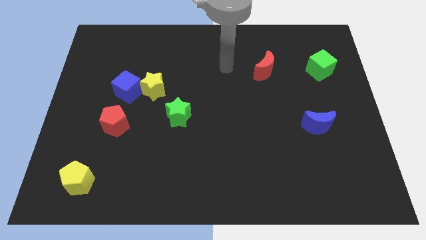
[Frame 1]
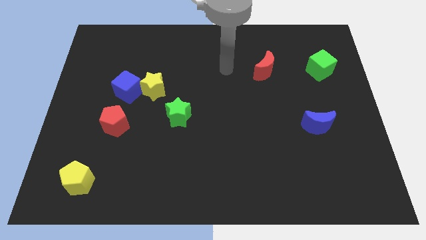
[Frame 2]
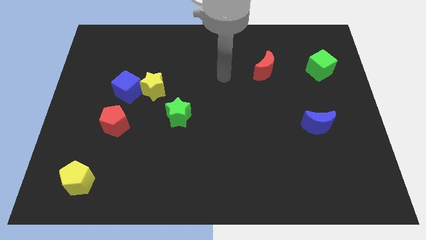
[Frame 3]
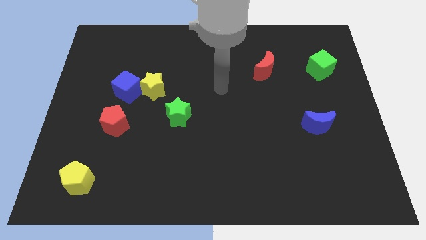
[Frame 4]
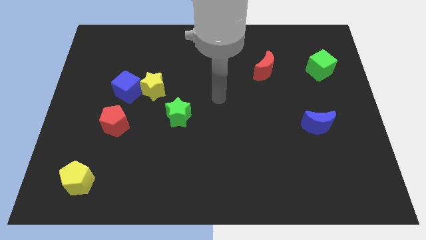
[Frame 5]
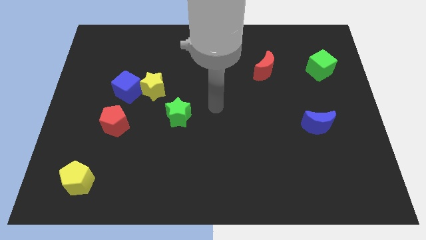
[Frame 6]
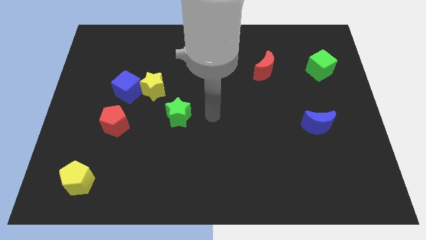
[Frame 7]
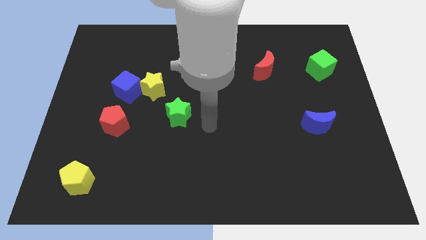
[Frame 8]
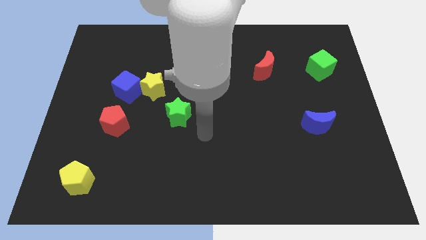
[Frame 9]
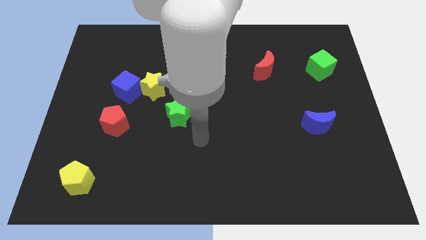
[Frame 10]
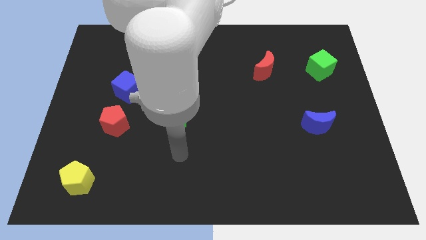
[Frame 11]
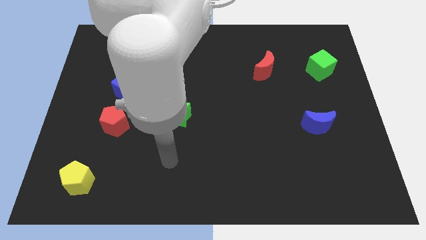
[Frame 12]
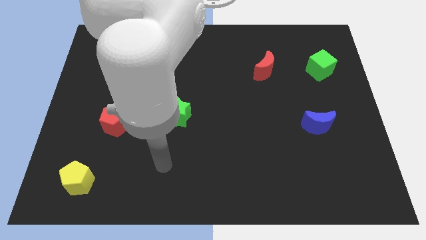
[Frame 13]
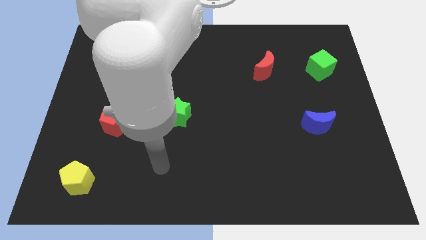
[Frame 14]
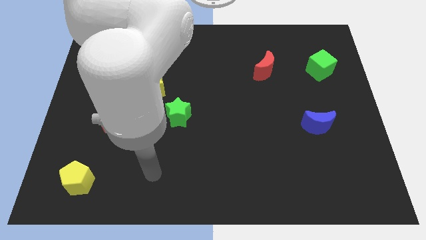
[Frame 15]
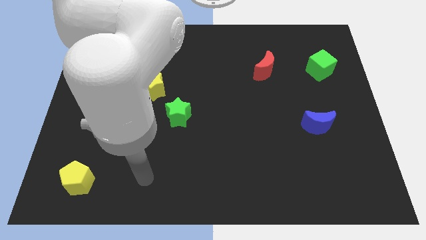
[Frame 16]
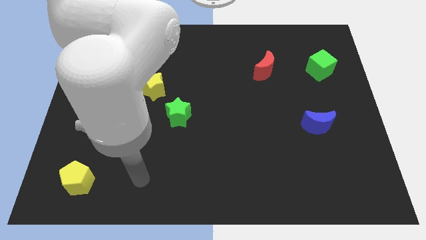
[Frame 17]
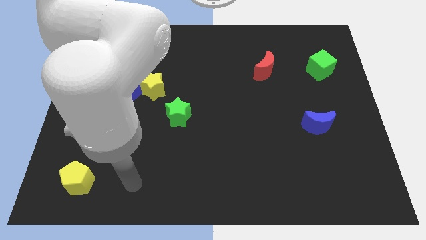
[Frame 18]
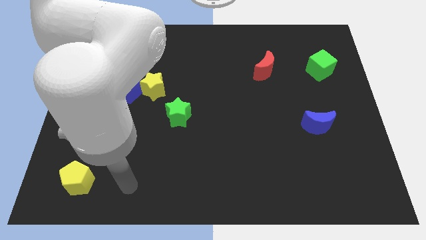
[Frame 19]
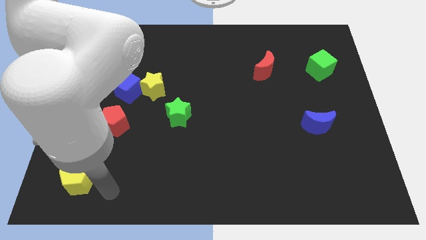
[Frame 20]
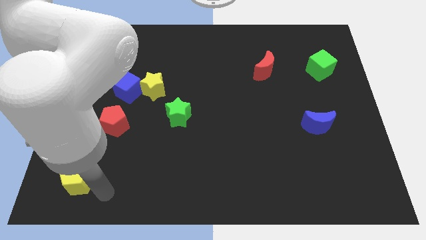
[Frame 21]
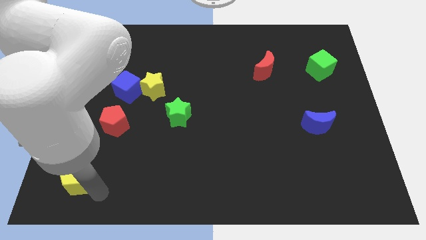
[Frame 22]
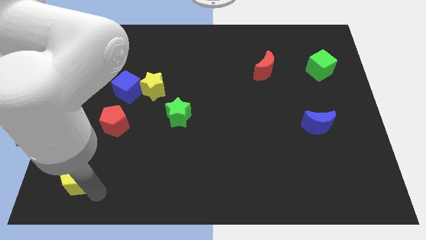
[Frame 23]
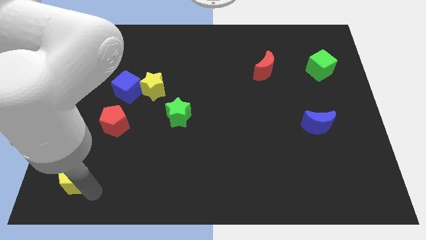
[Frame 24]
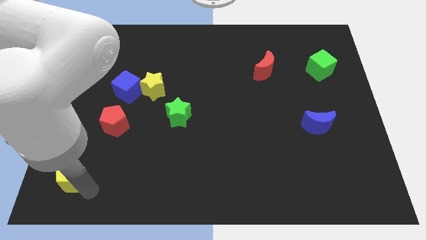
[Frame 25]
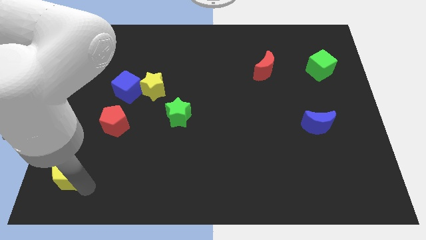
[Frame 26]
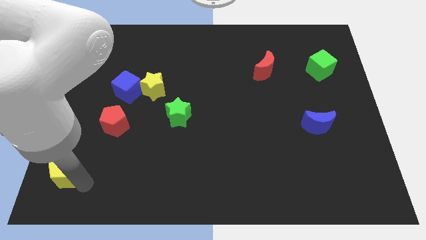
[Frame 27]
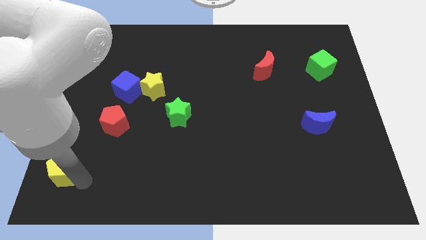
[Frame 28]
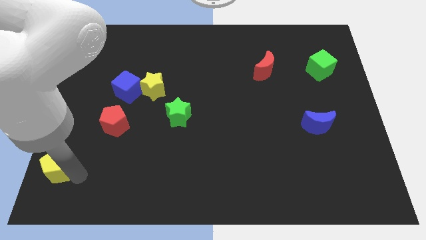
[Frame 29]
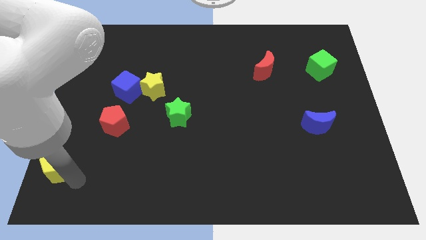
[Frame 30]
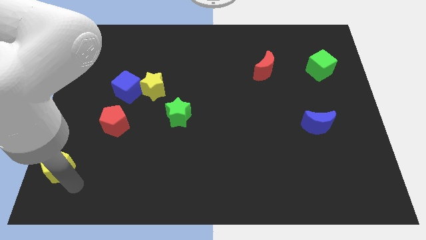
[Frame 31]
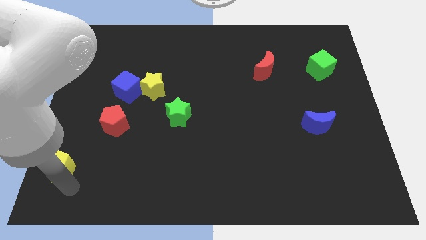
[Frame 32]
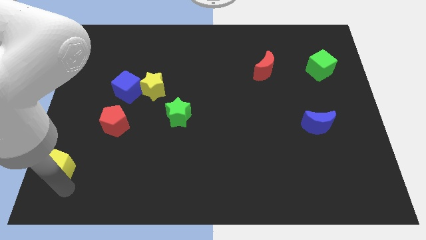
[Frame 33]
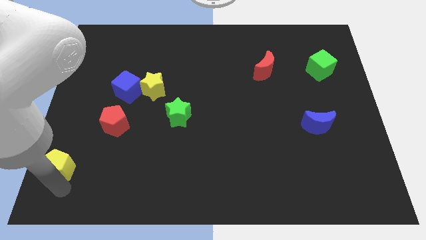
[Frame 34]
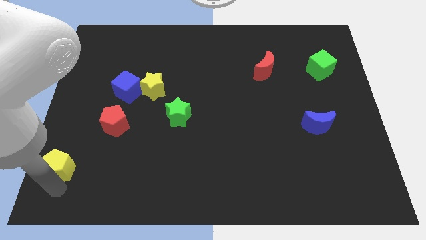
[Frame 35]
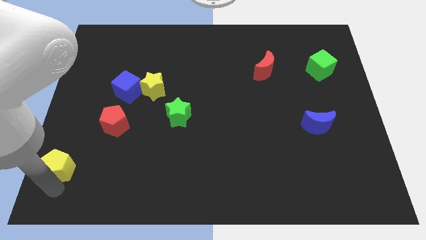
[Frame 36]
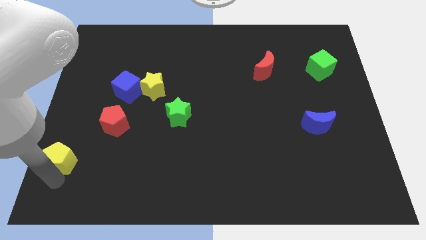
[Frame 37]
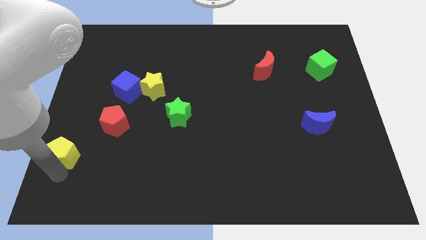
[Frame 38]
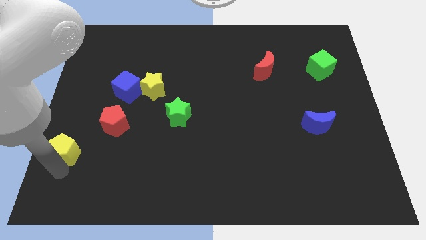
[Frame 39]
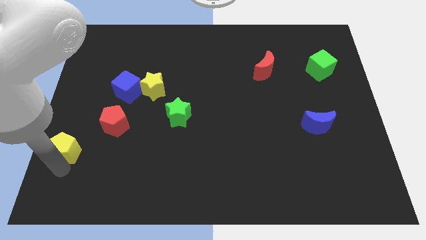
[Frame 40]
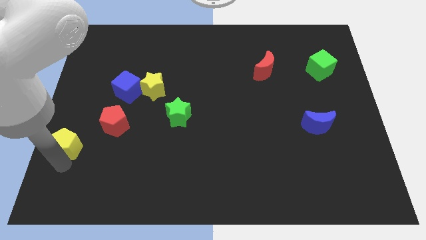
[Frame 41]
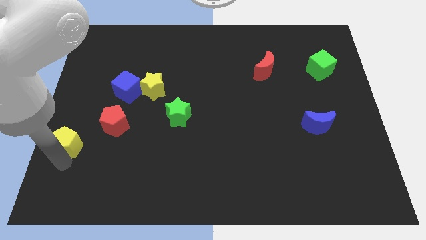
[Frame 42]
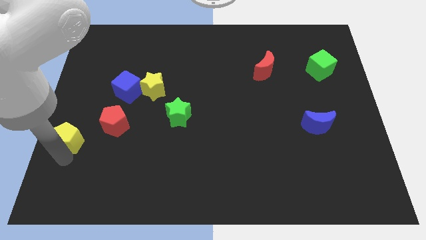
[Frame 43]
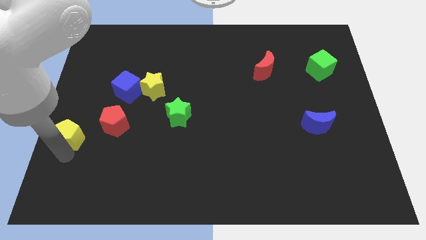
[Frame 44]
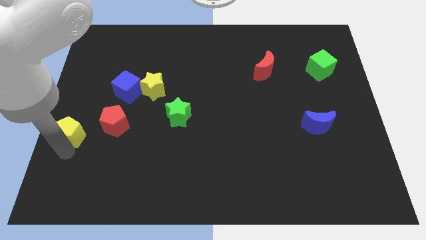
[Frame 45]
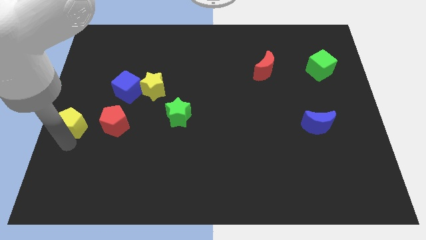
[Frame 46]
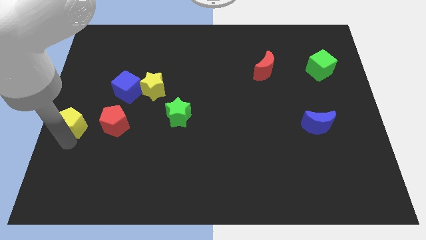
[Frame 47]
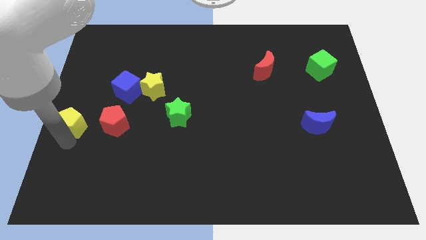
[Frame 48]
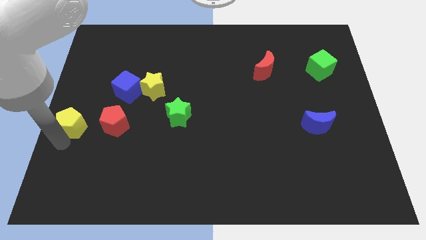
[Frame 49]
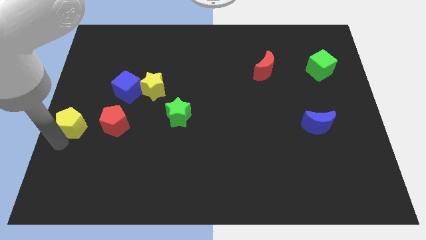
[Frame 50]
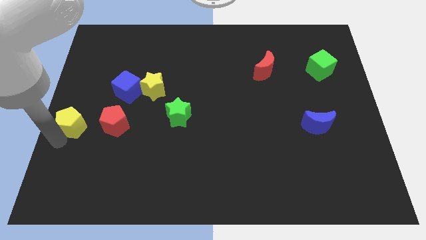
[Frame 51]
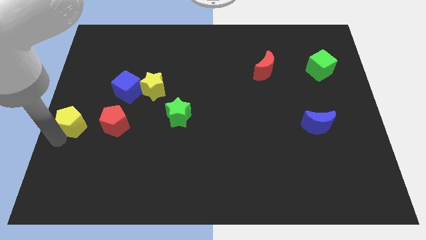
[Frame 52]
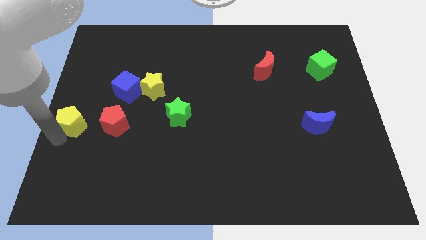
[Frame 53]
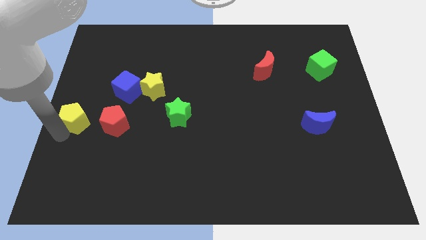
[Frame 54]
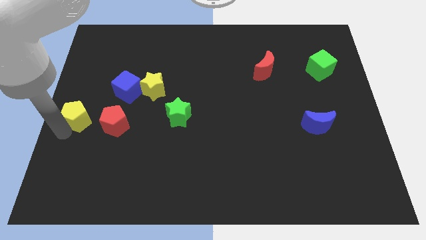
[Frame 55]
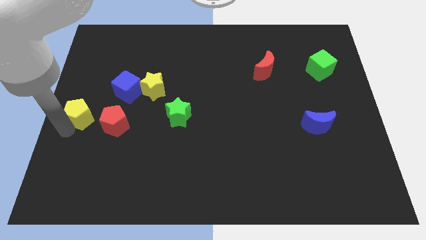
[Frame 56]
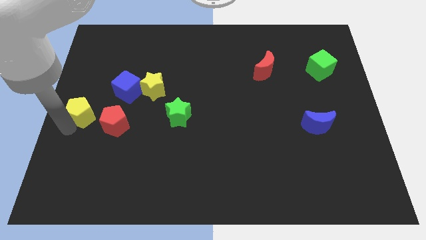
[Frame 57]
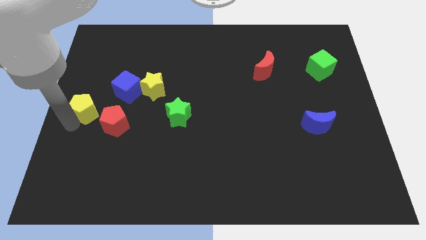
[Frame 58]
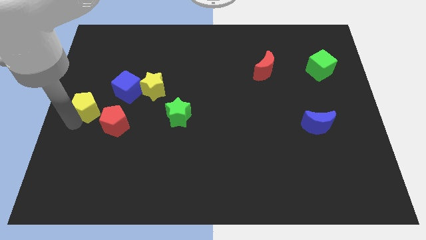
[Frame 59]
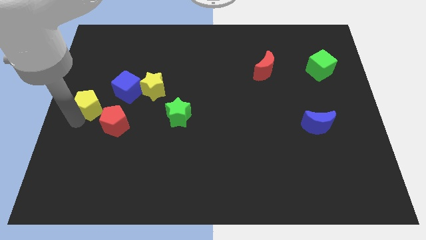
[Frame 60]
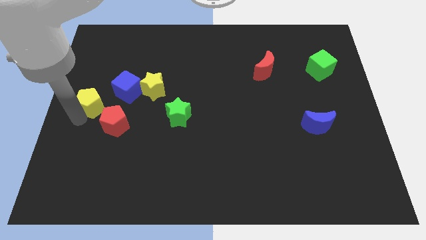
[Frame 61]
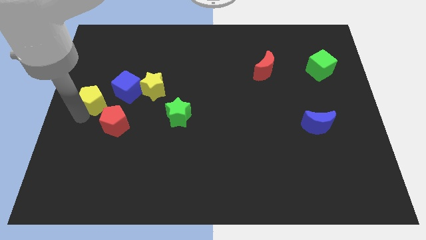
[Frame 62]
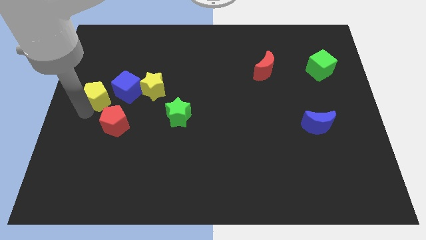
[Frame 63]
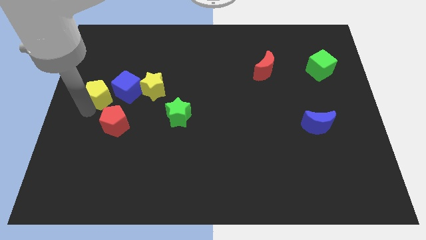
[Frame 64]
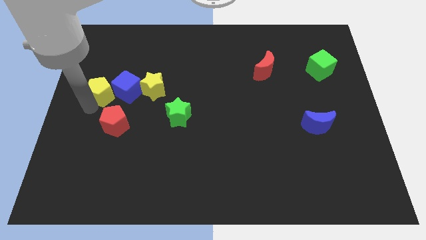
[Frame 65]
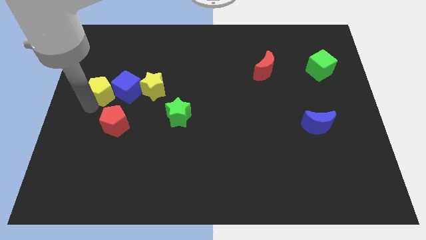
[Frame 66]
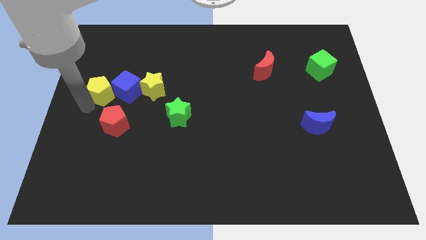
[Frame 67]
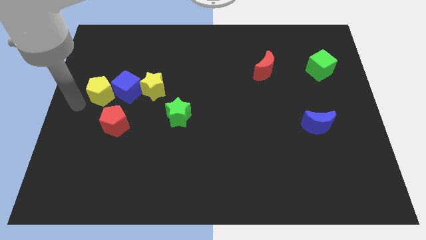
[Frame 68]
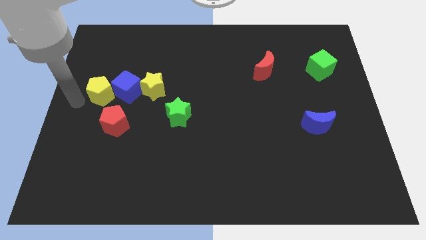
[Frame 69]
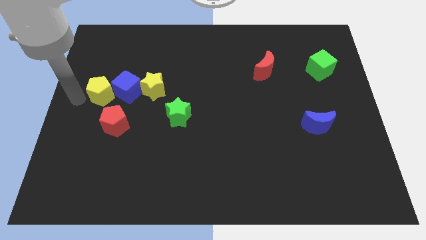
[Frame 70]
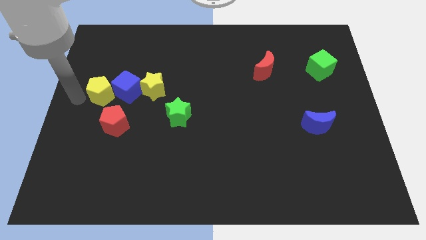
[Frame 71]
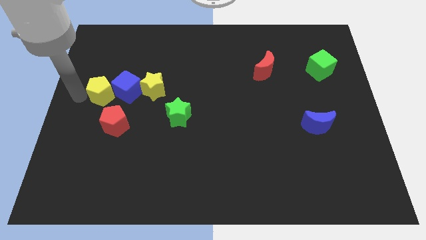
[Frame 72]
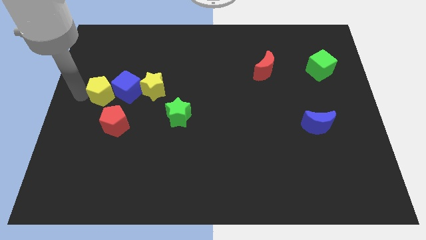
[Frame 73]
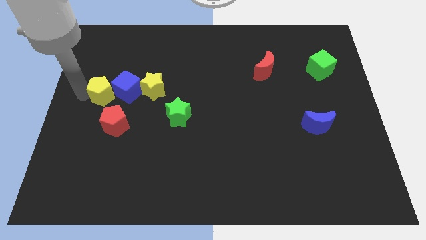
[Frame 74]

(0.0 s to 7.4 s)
slide the yellow pentagon to the blue cube

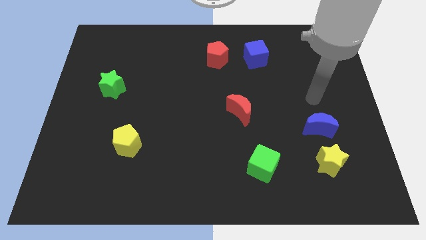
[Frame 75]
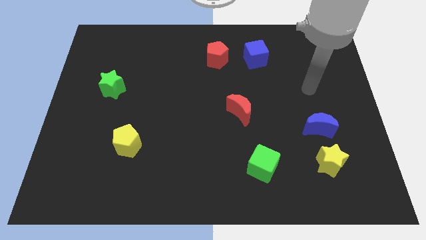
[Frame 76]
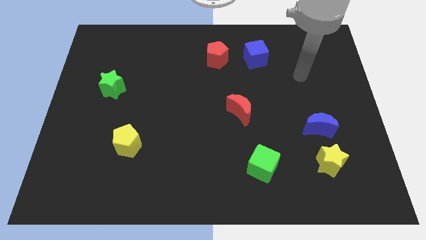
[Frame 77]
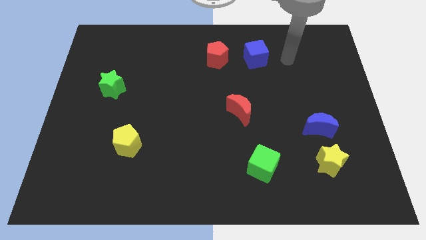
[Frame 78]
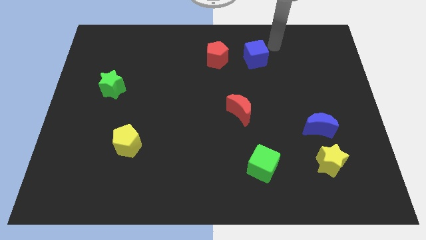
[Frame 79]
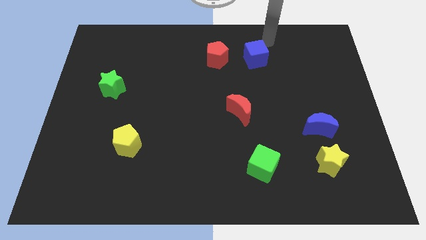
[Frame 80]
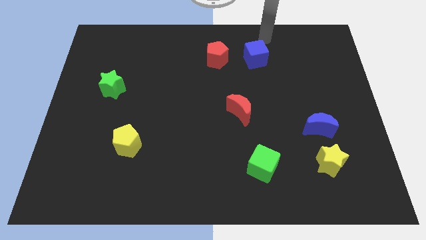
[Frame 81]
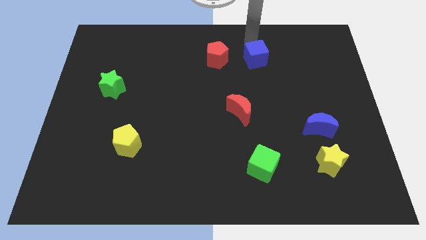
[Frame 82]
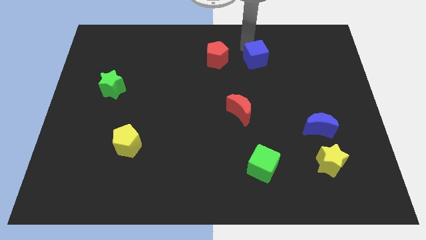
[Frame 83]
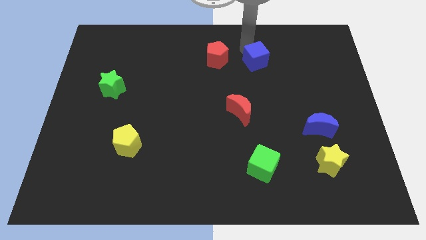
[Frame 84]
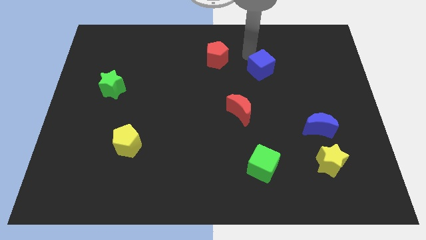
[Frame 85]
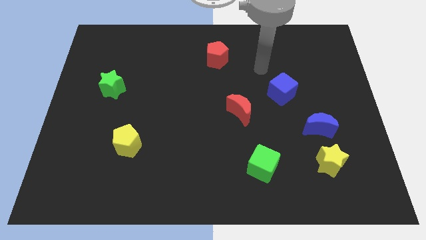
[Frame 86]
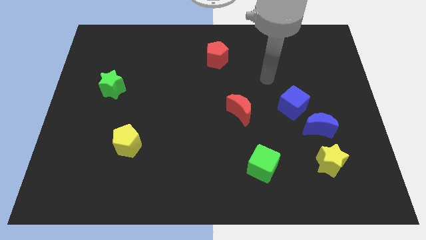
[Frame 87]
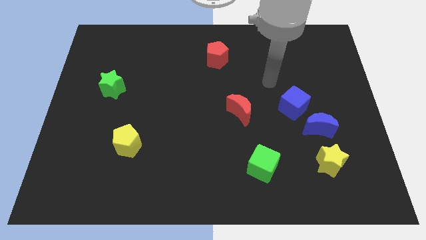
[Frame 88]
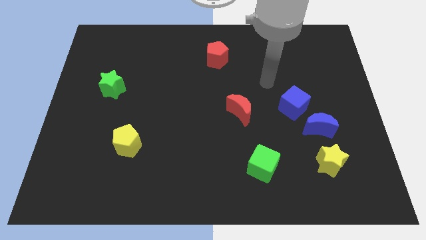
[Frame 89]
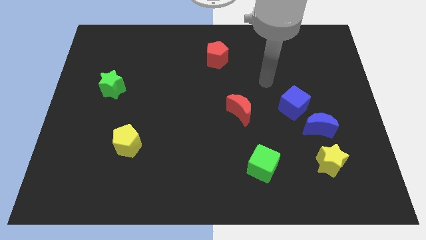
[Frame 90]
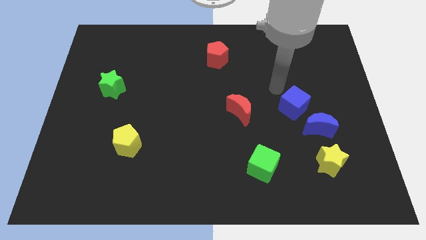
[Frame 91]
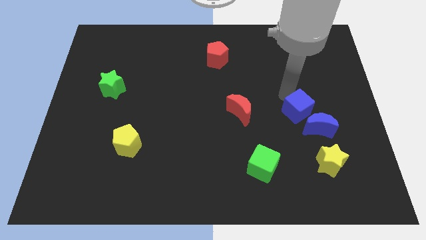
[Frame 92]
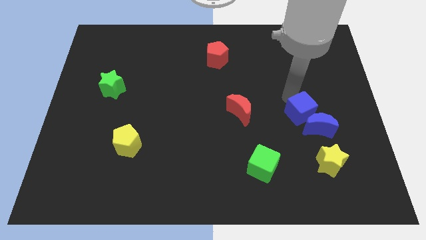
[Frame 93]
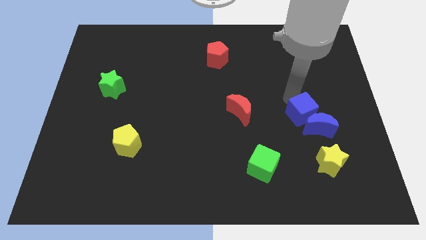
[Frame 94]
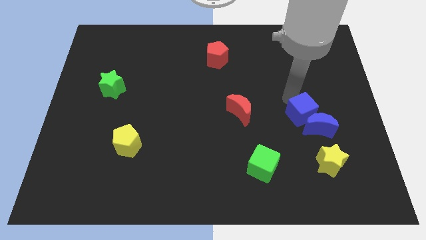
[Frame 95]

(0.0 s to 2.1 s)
slide the blue cube to the blue moon
